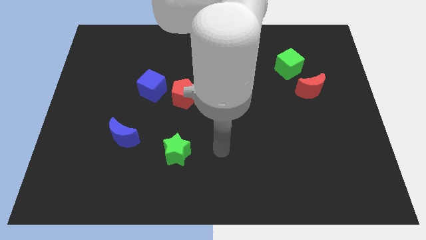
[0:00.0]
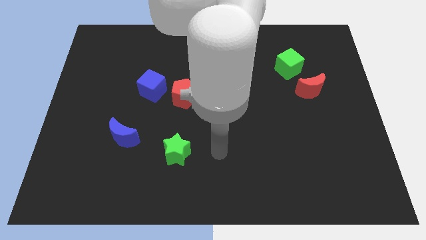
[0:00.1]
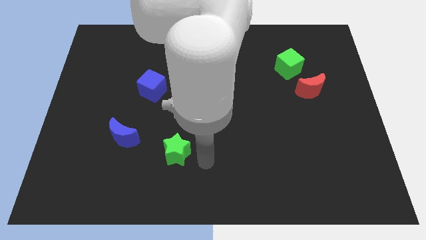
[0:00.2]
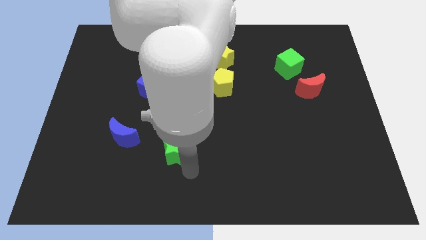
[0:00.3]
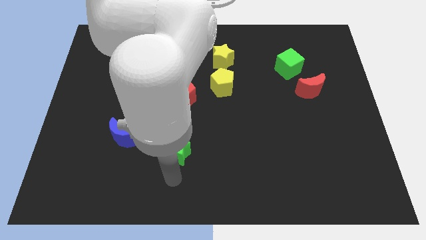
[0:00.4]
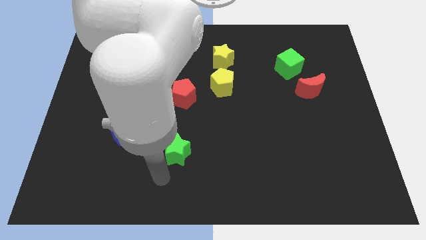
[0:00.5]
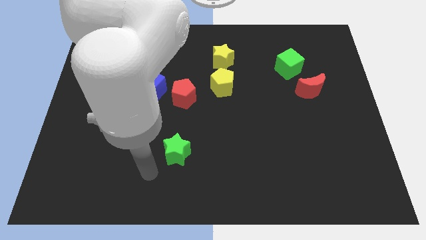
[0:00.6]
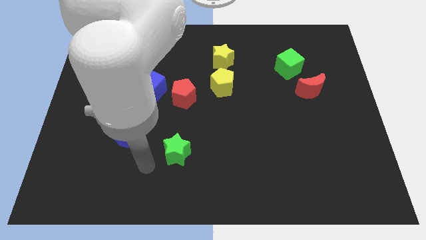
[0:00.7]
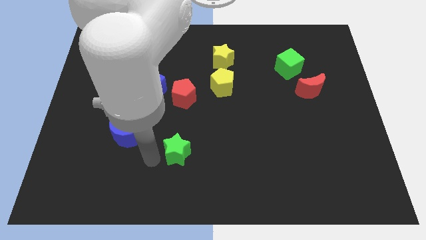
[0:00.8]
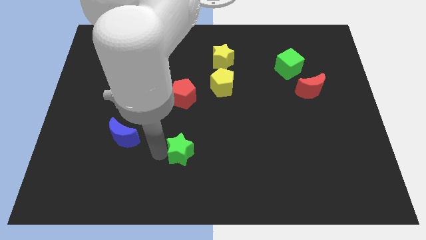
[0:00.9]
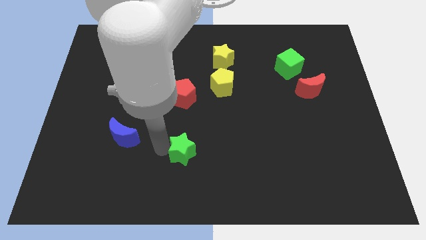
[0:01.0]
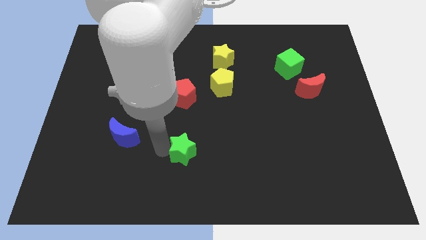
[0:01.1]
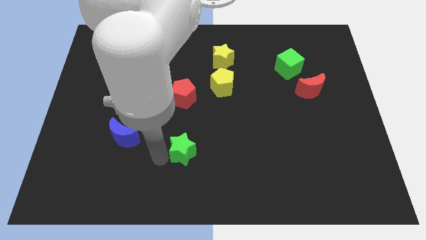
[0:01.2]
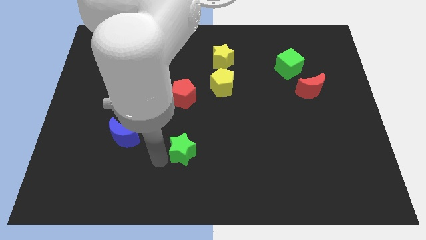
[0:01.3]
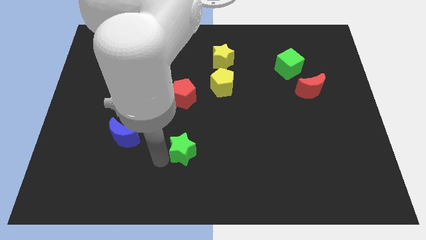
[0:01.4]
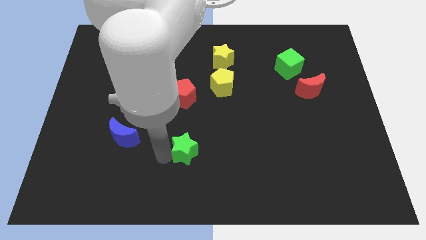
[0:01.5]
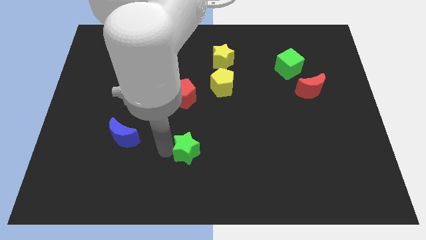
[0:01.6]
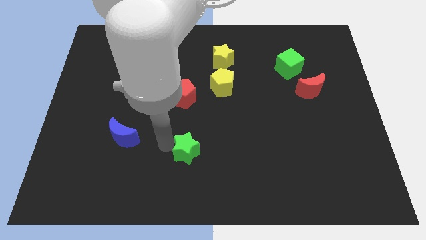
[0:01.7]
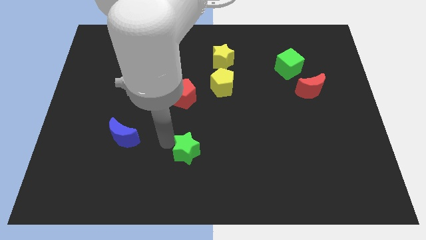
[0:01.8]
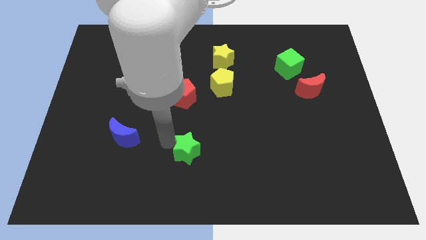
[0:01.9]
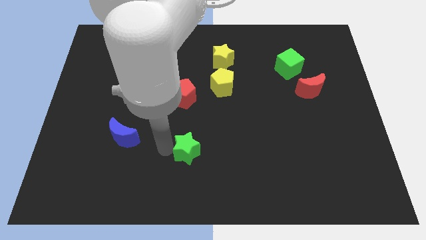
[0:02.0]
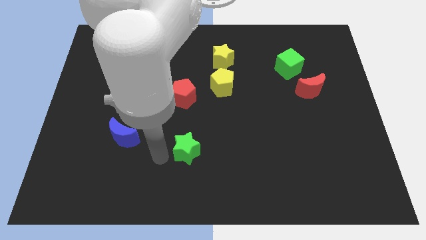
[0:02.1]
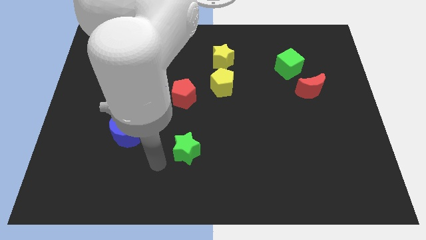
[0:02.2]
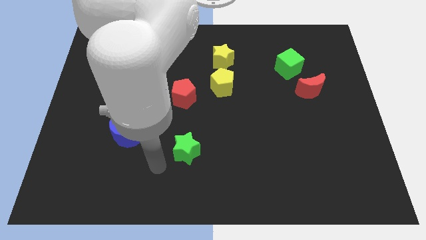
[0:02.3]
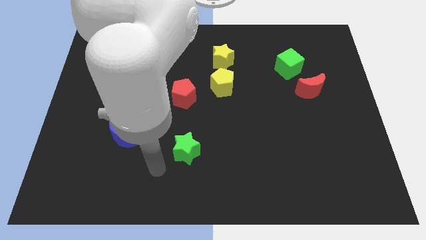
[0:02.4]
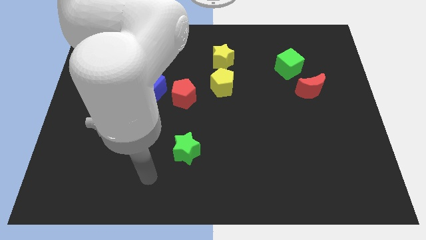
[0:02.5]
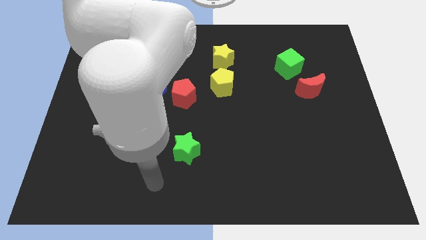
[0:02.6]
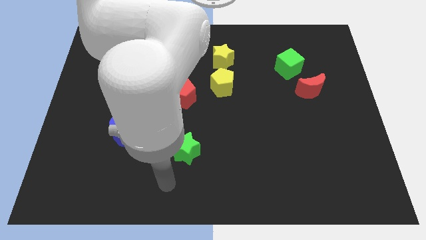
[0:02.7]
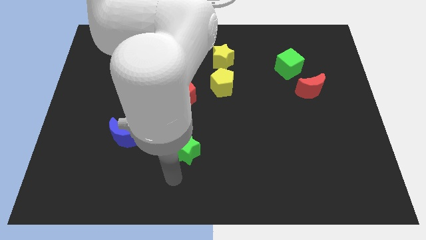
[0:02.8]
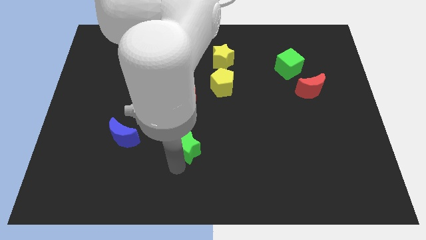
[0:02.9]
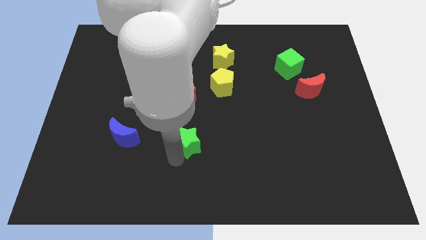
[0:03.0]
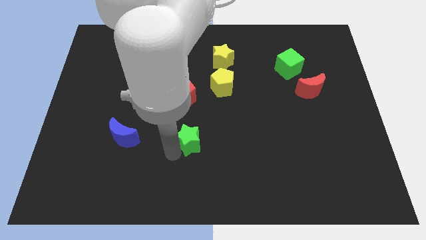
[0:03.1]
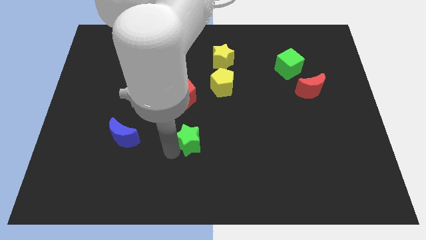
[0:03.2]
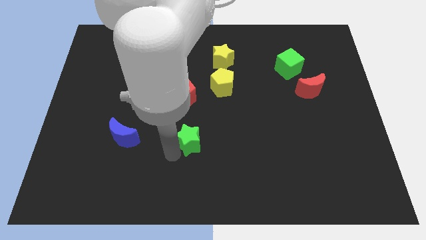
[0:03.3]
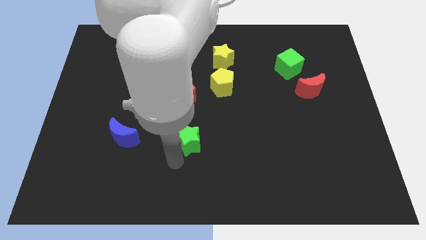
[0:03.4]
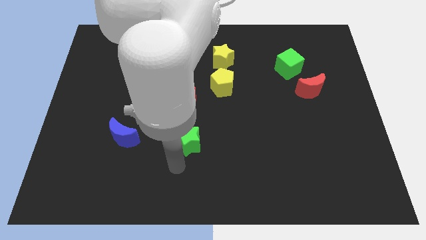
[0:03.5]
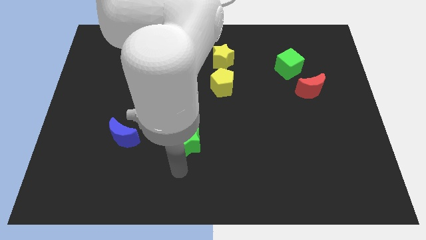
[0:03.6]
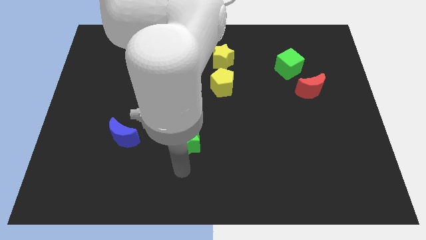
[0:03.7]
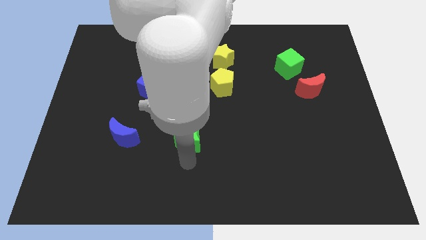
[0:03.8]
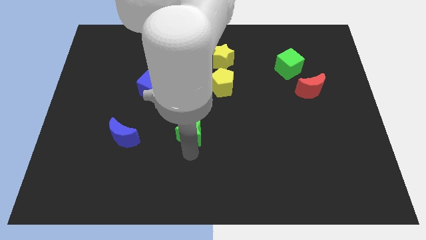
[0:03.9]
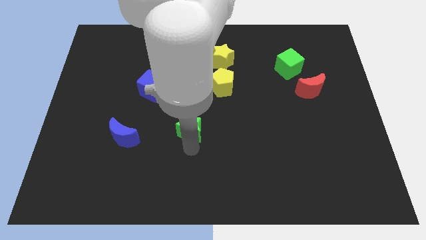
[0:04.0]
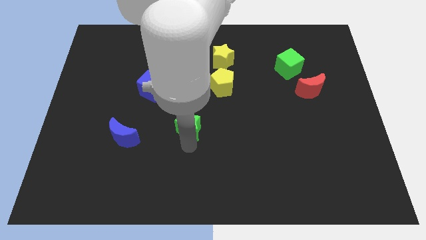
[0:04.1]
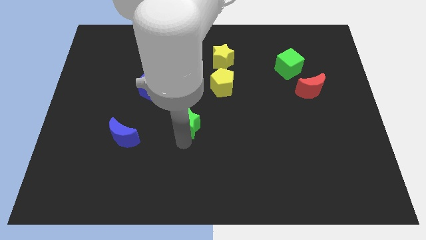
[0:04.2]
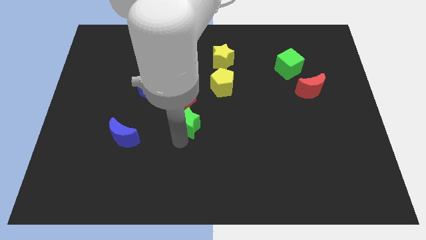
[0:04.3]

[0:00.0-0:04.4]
move the green star towards the red pentagon

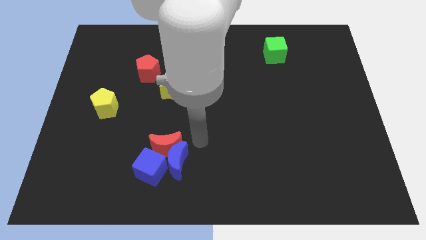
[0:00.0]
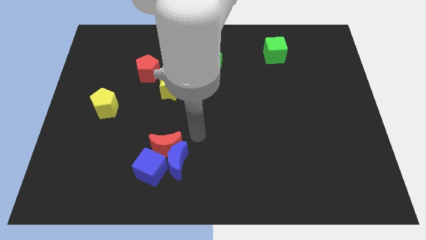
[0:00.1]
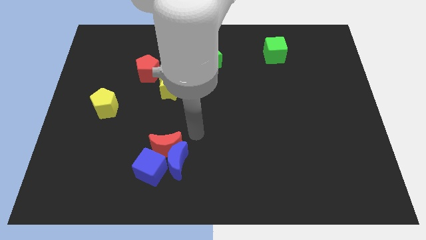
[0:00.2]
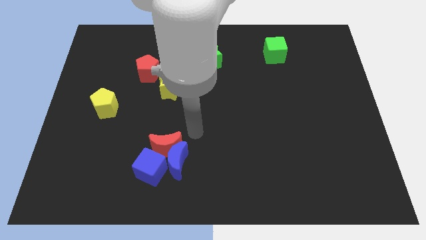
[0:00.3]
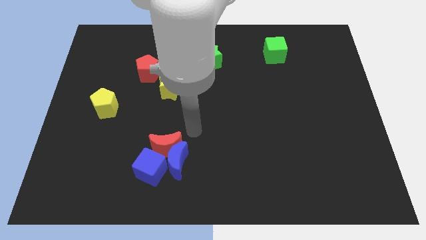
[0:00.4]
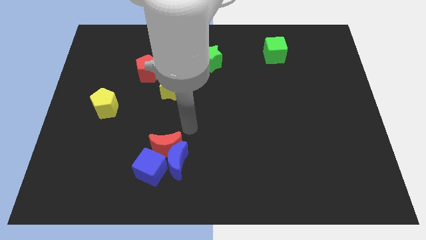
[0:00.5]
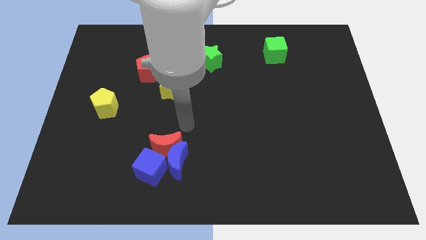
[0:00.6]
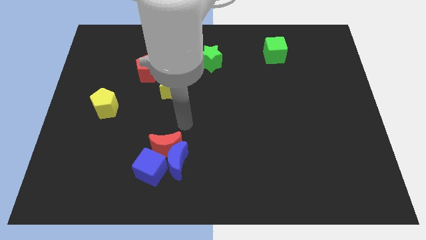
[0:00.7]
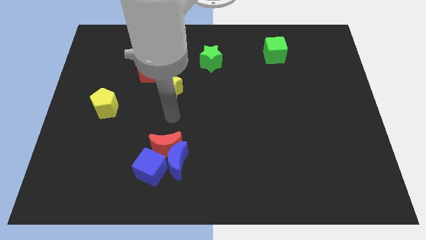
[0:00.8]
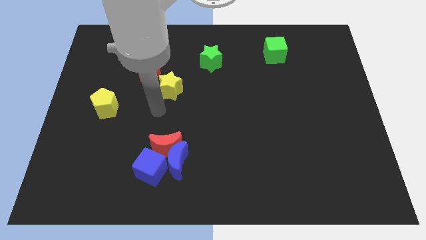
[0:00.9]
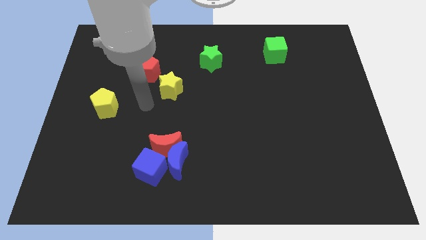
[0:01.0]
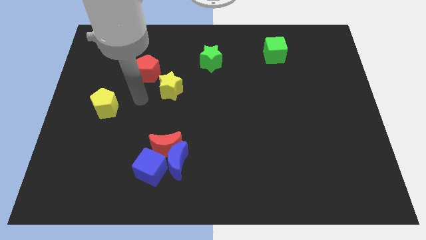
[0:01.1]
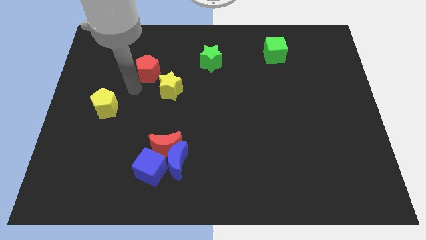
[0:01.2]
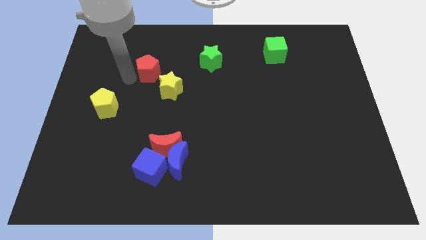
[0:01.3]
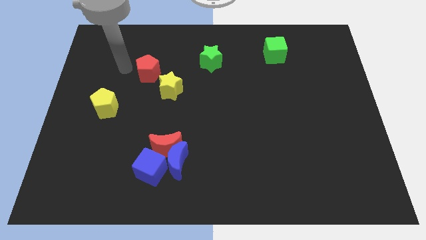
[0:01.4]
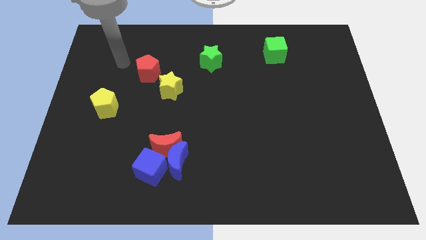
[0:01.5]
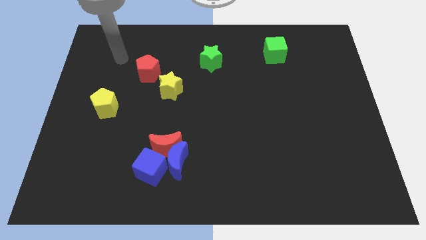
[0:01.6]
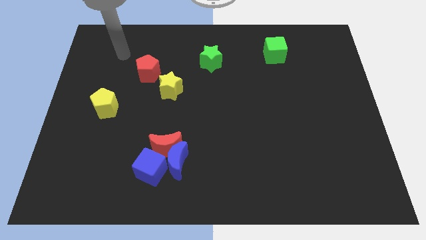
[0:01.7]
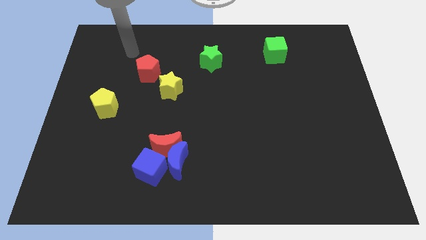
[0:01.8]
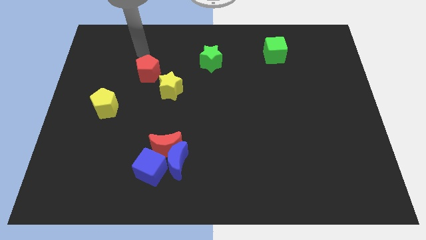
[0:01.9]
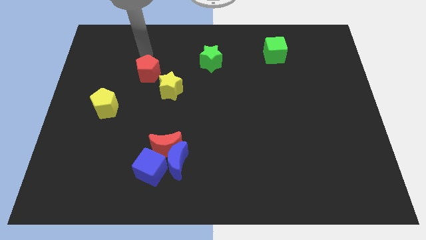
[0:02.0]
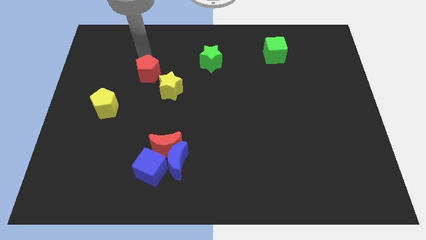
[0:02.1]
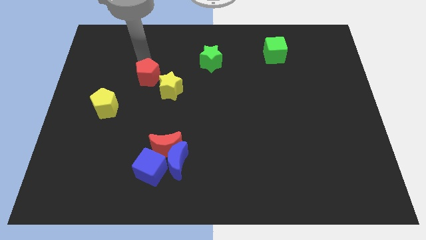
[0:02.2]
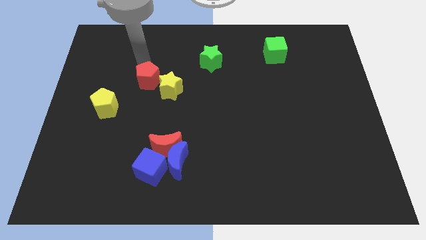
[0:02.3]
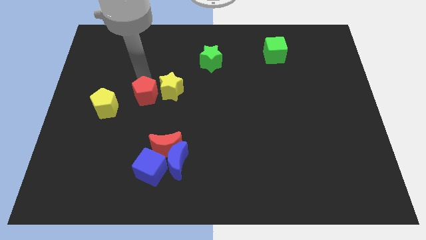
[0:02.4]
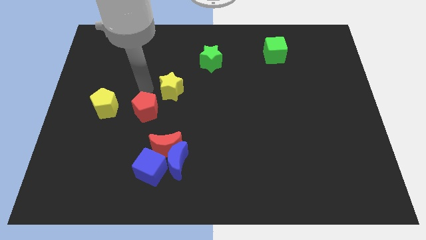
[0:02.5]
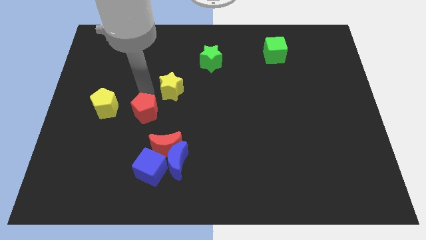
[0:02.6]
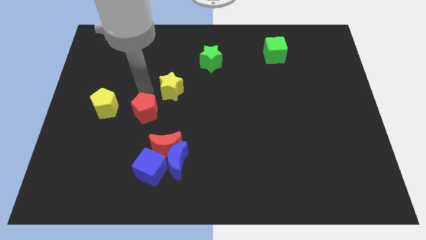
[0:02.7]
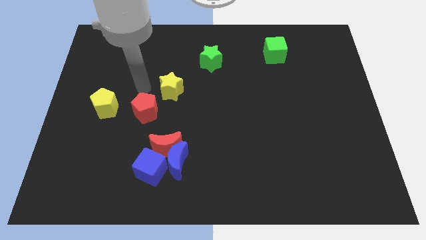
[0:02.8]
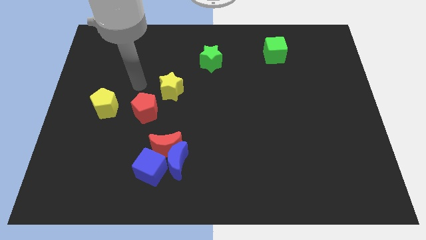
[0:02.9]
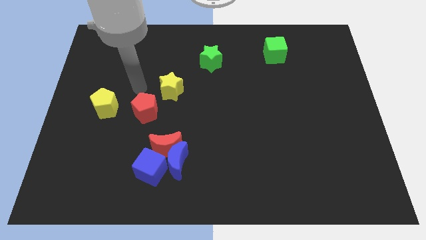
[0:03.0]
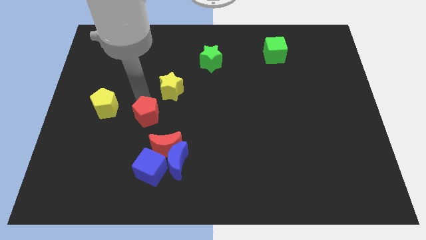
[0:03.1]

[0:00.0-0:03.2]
move the red pentagon towards the top left of the red moon

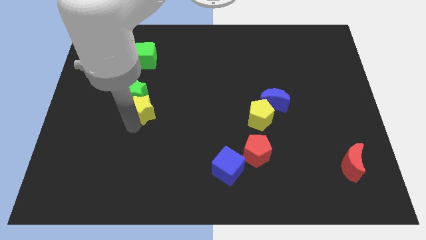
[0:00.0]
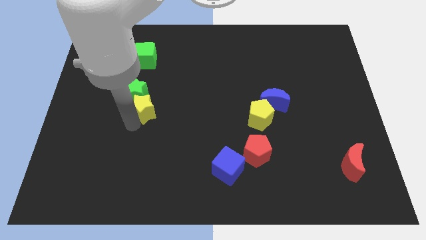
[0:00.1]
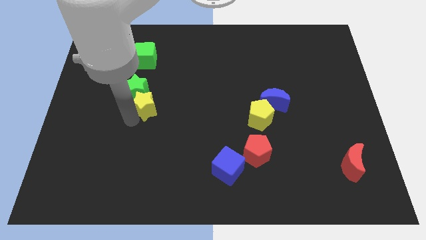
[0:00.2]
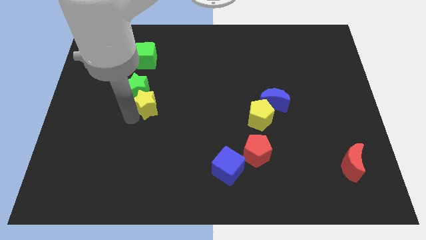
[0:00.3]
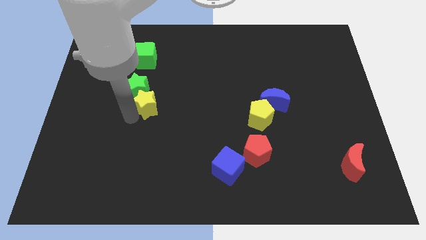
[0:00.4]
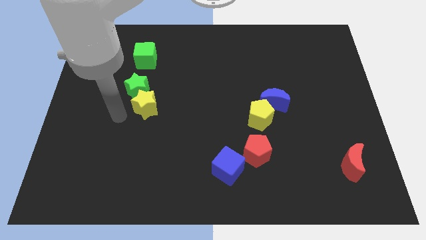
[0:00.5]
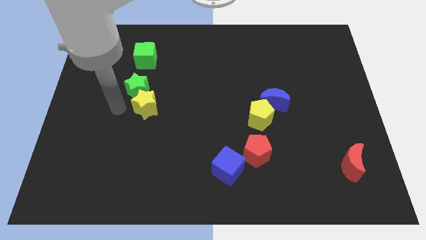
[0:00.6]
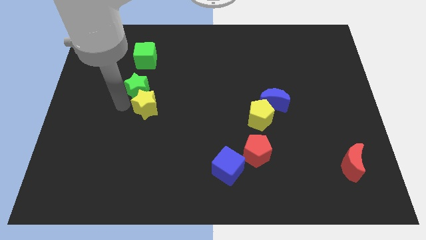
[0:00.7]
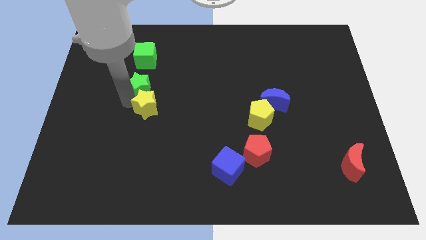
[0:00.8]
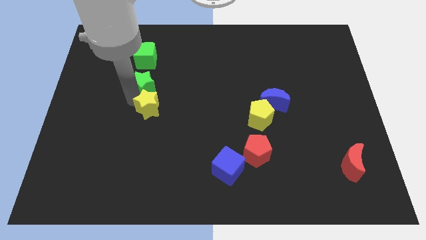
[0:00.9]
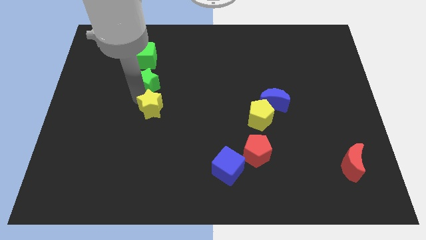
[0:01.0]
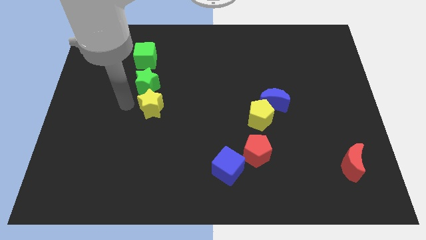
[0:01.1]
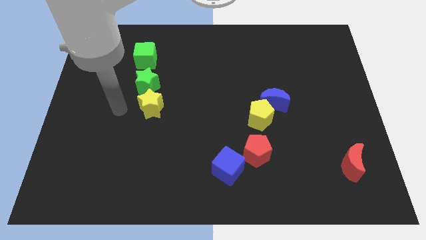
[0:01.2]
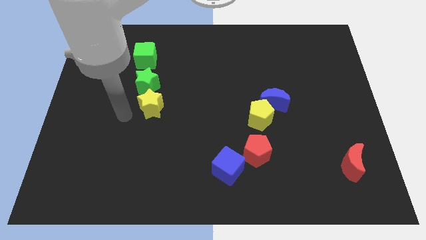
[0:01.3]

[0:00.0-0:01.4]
place green star in between yellow star and green cube
